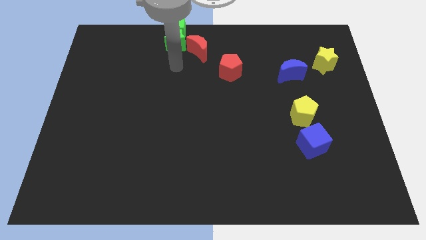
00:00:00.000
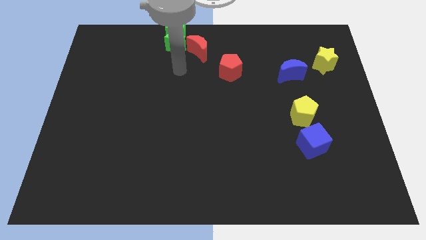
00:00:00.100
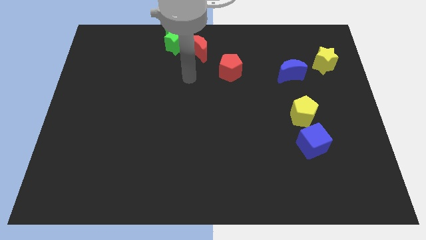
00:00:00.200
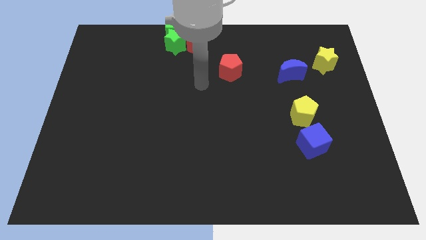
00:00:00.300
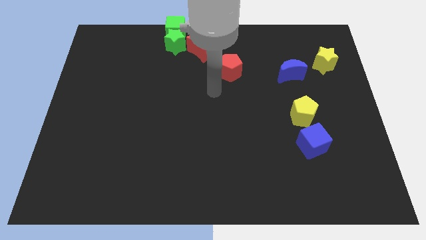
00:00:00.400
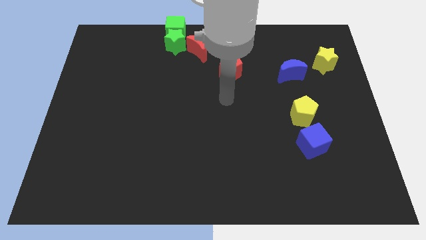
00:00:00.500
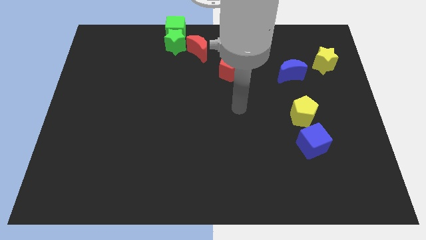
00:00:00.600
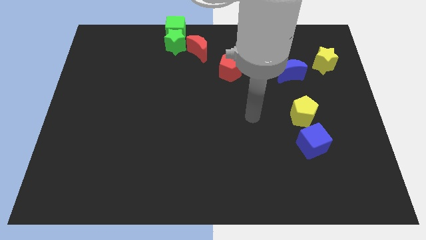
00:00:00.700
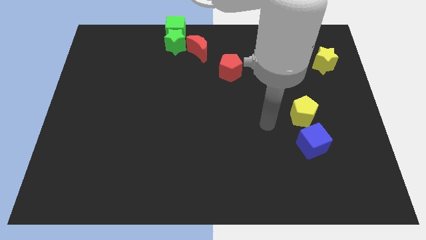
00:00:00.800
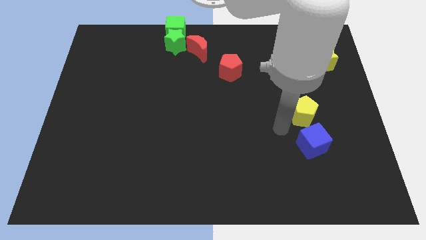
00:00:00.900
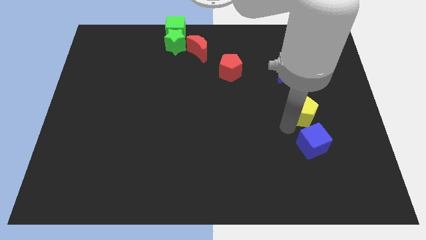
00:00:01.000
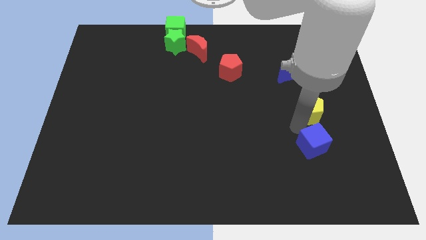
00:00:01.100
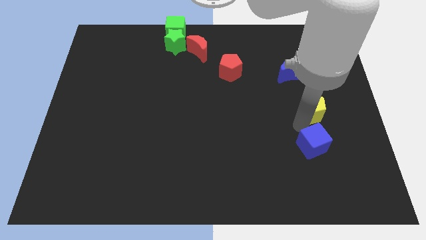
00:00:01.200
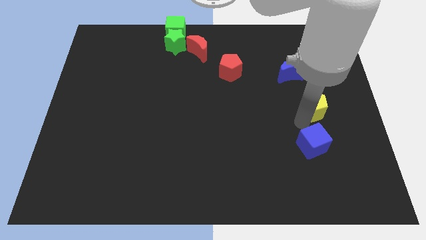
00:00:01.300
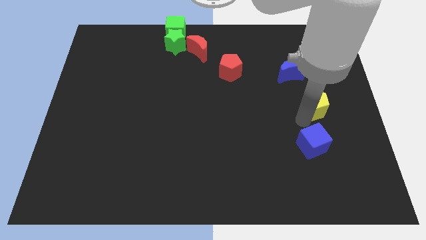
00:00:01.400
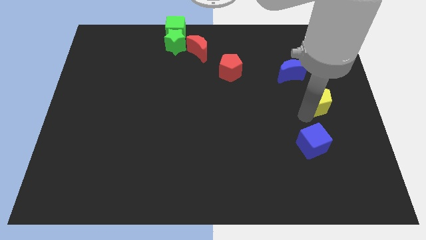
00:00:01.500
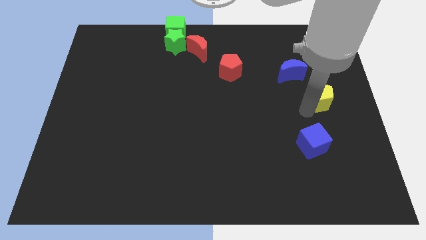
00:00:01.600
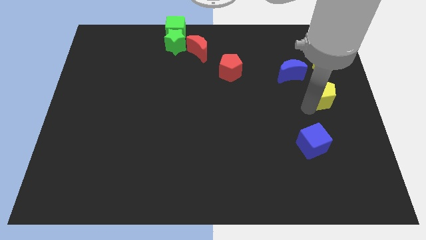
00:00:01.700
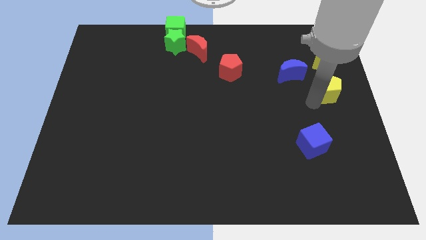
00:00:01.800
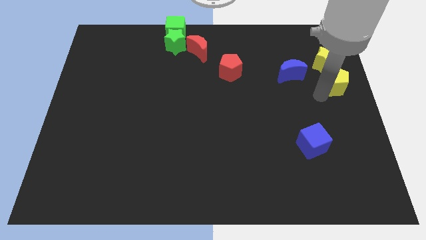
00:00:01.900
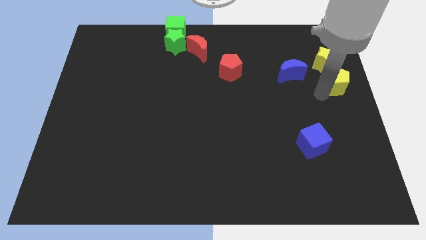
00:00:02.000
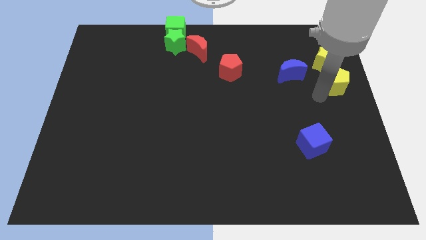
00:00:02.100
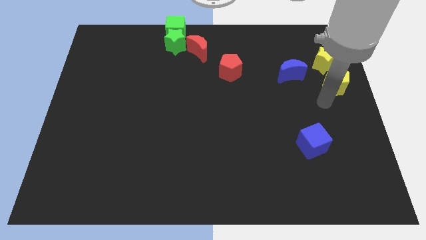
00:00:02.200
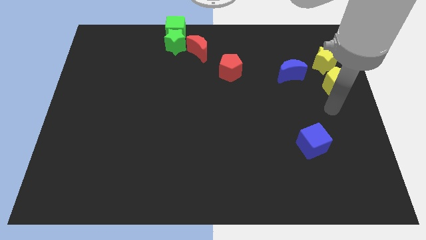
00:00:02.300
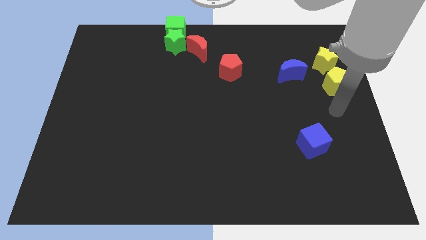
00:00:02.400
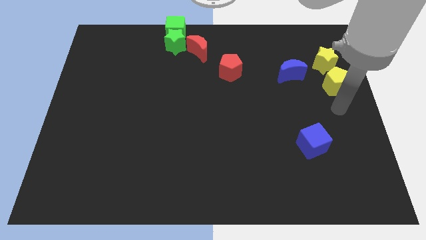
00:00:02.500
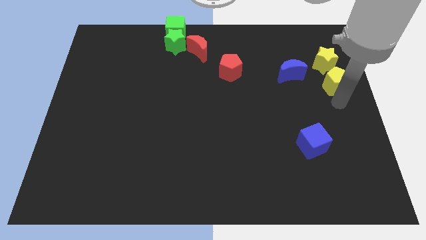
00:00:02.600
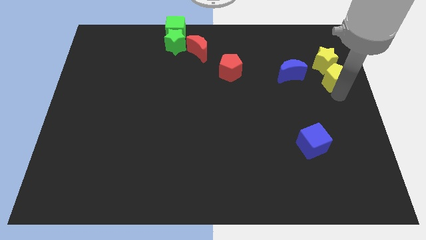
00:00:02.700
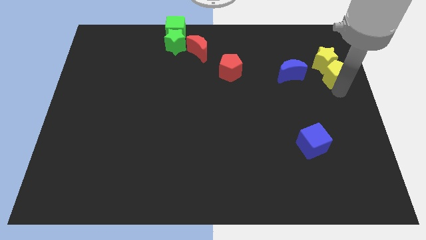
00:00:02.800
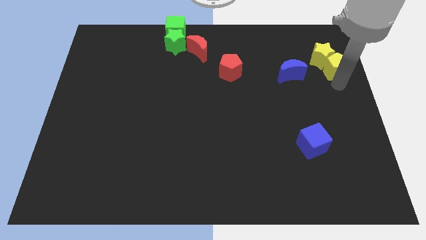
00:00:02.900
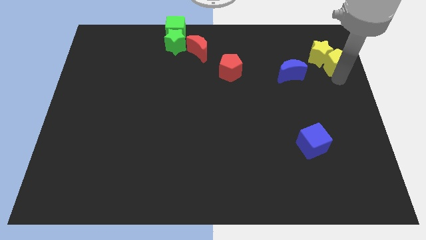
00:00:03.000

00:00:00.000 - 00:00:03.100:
place yellow pentagon at the bottom side of the yellow star

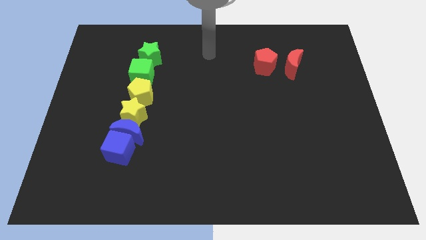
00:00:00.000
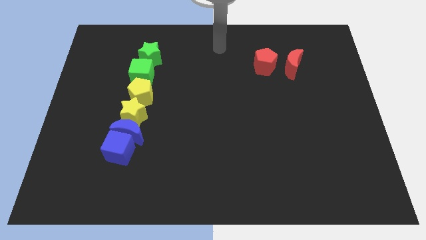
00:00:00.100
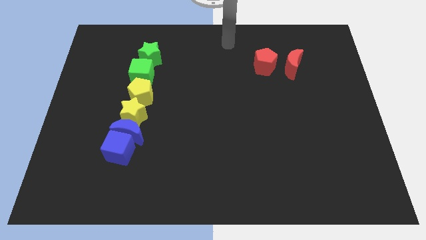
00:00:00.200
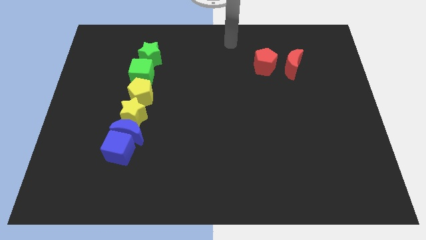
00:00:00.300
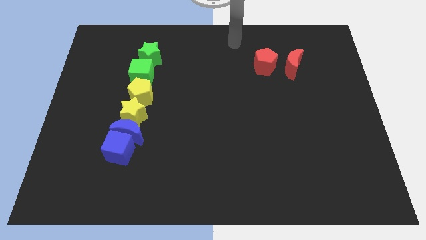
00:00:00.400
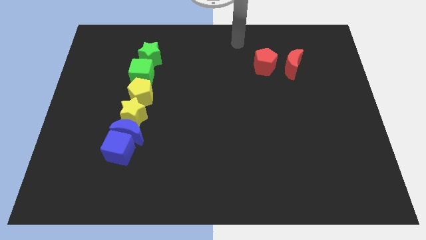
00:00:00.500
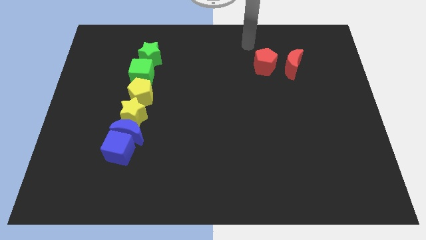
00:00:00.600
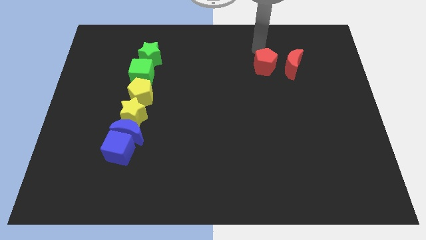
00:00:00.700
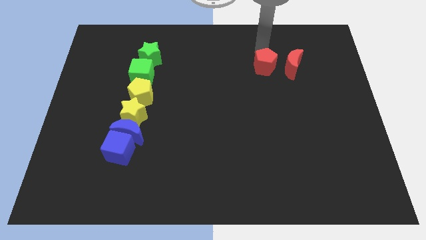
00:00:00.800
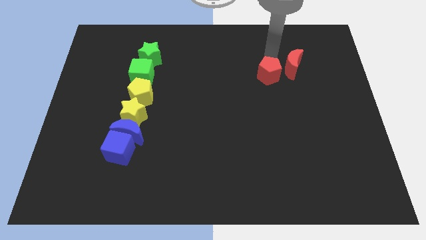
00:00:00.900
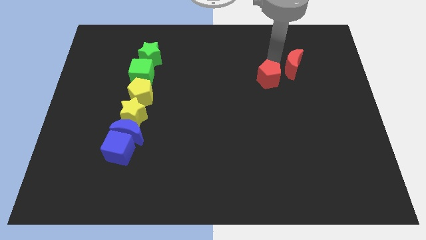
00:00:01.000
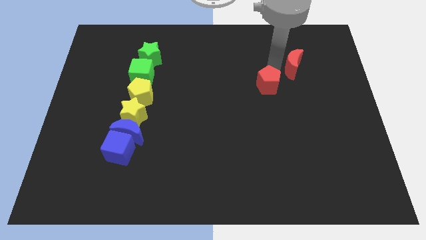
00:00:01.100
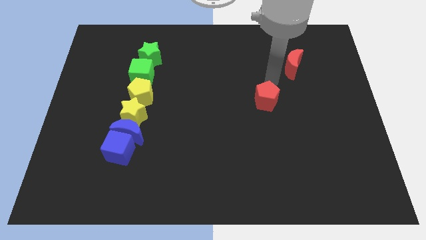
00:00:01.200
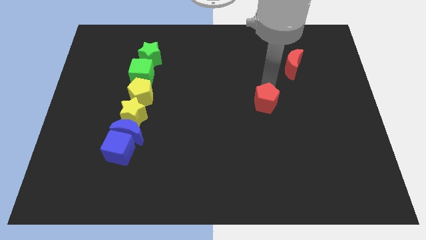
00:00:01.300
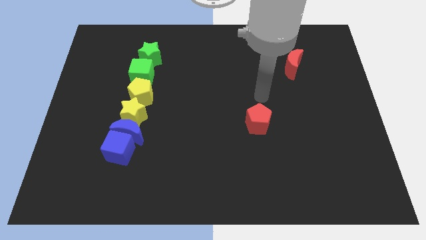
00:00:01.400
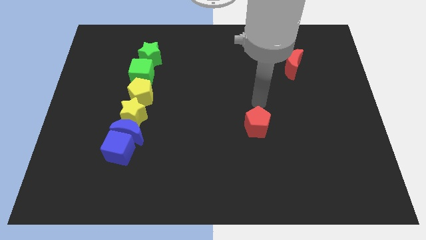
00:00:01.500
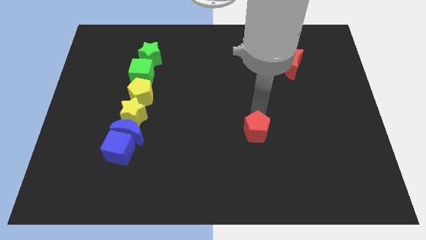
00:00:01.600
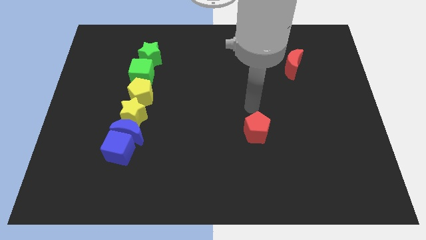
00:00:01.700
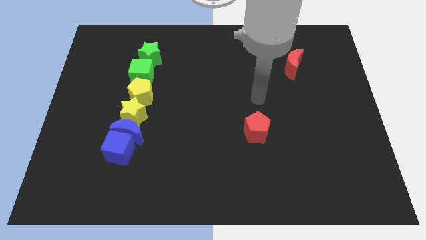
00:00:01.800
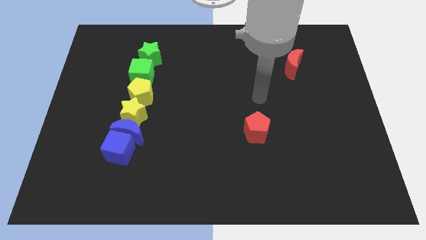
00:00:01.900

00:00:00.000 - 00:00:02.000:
move the red pentagon towards the bottom

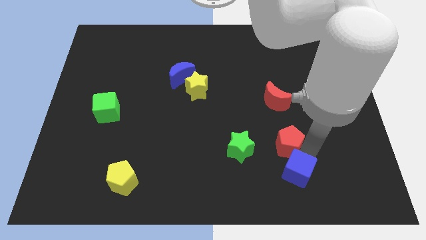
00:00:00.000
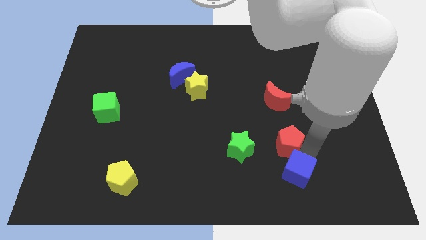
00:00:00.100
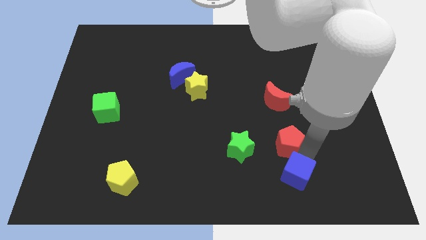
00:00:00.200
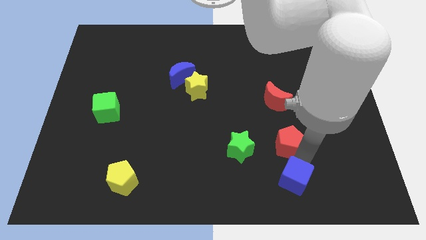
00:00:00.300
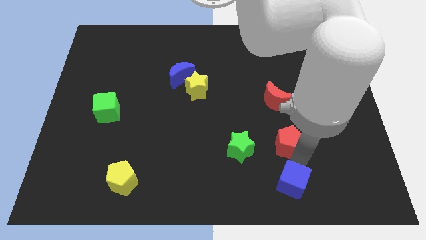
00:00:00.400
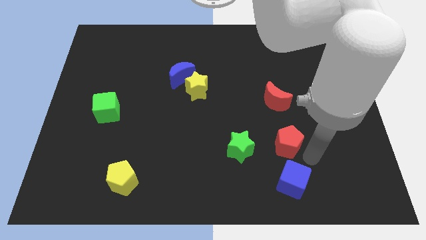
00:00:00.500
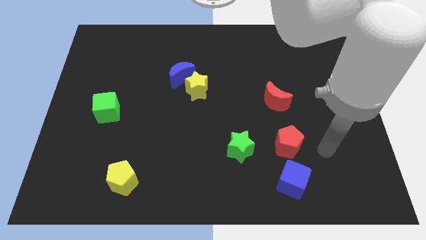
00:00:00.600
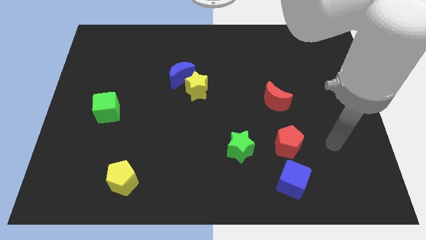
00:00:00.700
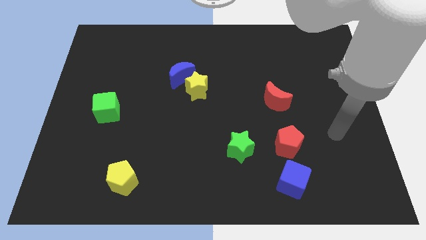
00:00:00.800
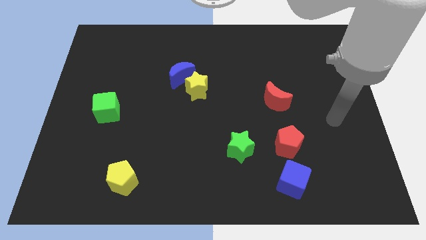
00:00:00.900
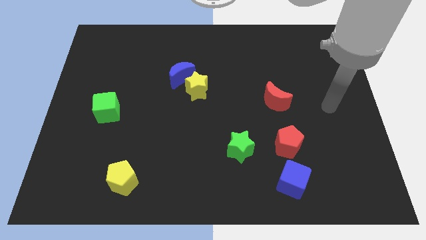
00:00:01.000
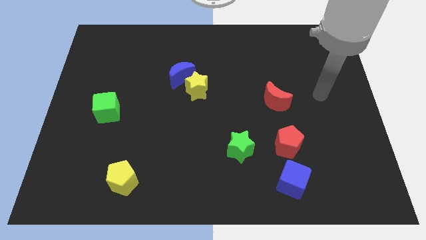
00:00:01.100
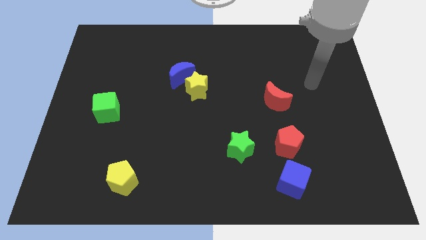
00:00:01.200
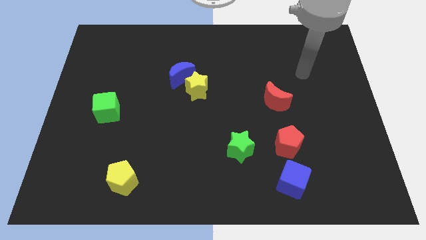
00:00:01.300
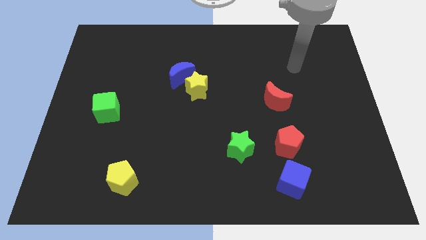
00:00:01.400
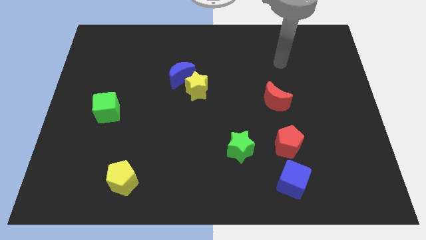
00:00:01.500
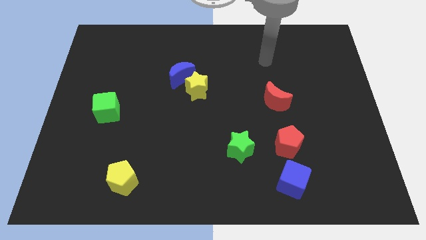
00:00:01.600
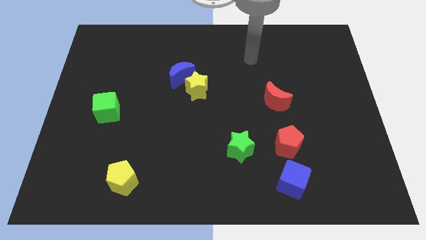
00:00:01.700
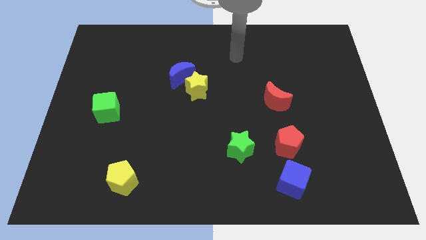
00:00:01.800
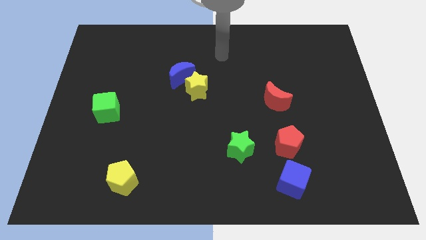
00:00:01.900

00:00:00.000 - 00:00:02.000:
push the blue cube towards the bottom side

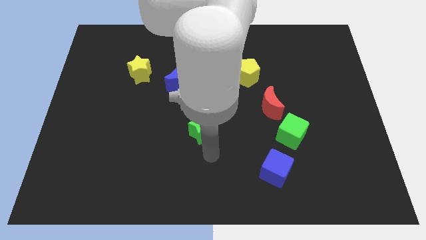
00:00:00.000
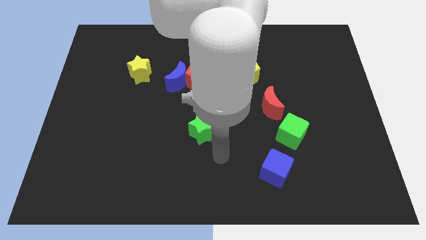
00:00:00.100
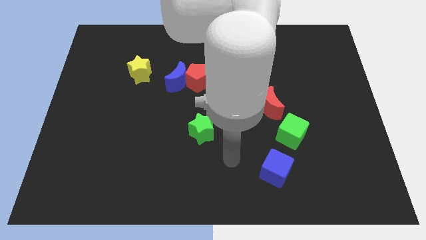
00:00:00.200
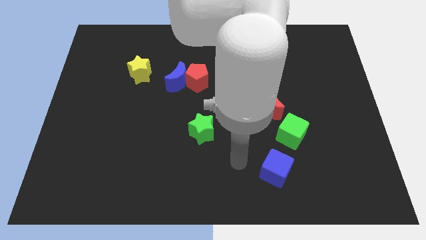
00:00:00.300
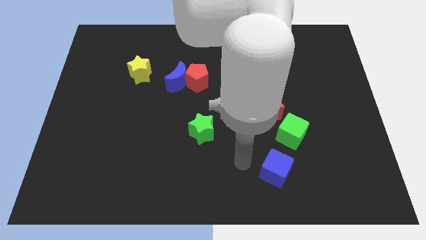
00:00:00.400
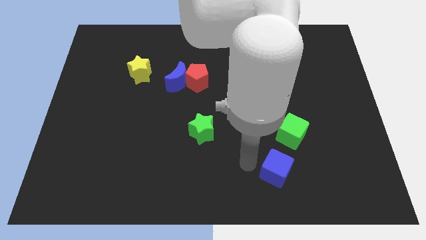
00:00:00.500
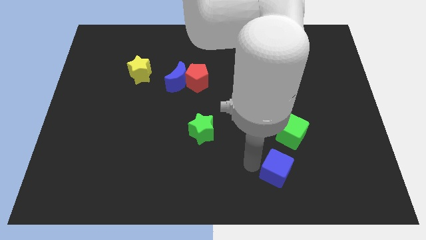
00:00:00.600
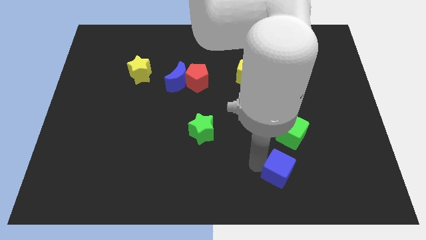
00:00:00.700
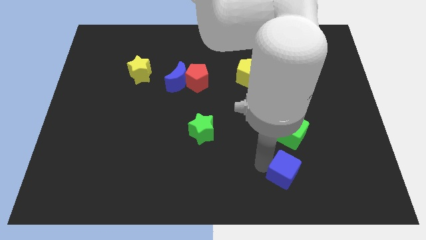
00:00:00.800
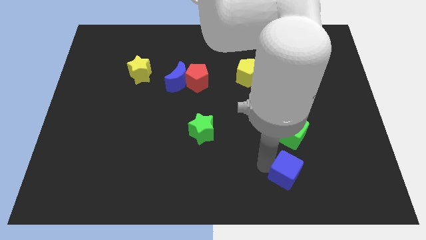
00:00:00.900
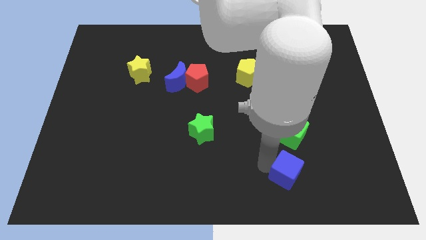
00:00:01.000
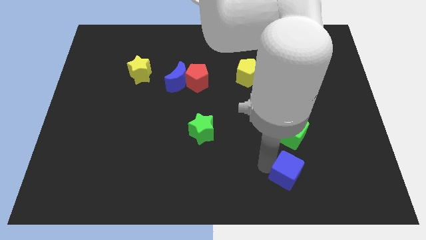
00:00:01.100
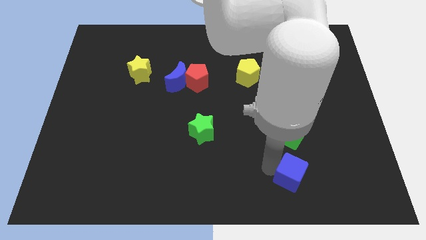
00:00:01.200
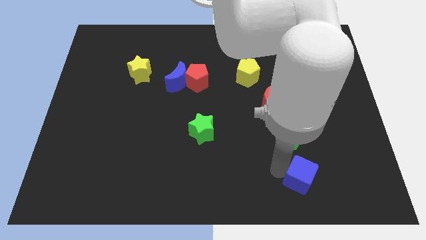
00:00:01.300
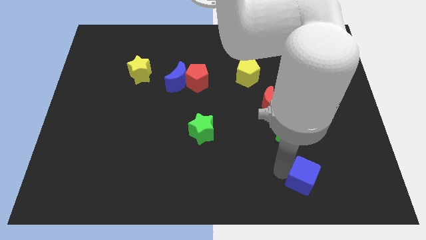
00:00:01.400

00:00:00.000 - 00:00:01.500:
push the blue cube to the right of the board

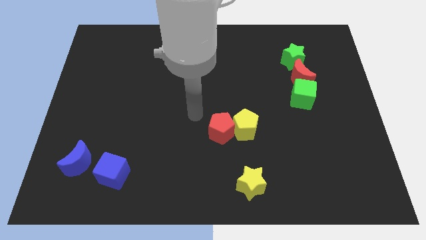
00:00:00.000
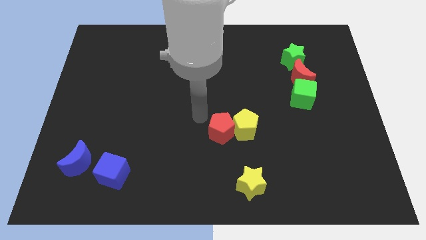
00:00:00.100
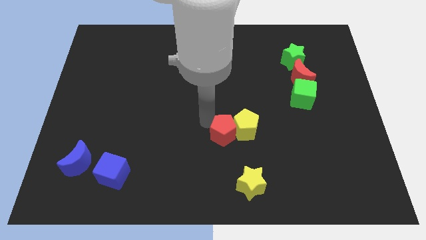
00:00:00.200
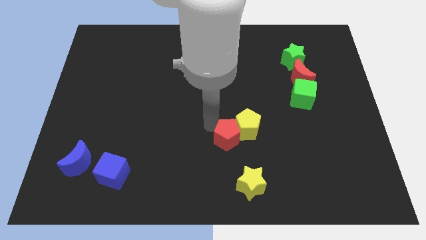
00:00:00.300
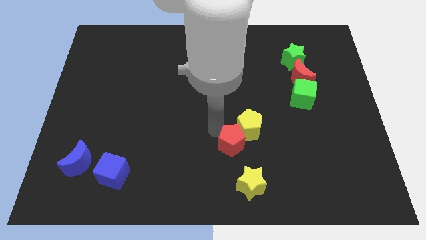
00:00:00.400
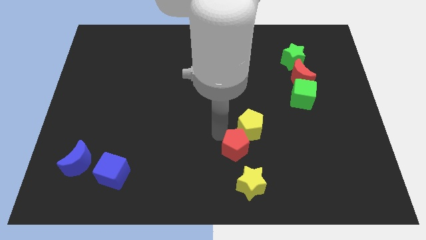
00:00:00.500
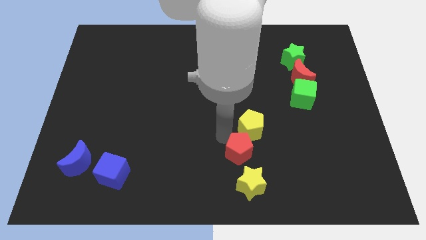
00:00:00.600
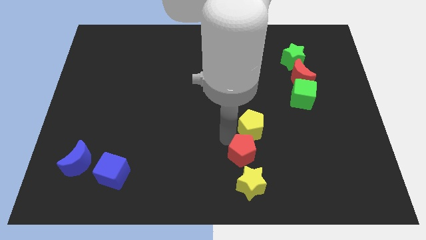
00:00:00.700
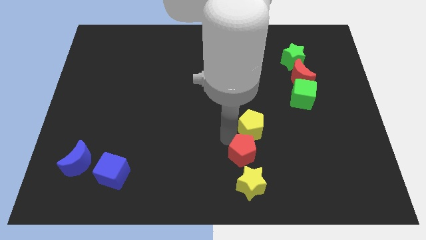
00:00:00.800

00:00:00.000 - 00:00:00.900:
place the red pentagon between the yellow pentagon and yellow star
